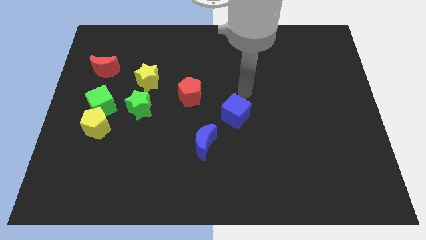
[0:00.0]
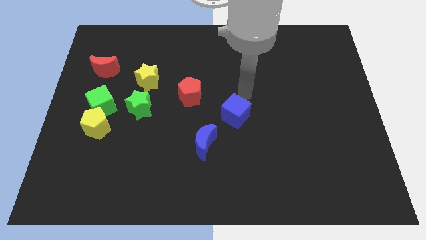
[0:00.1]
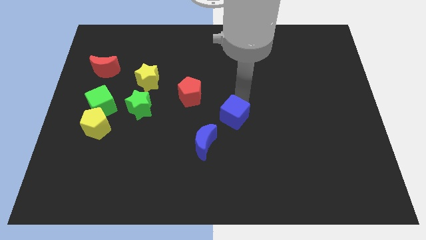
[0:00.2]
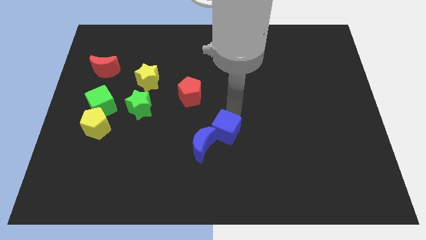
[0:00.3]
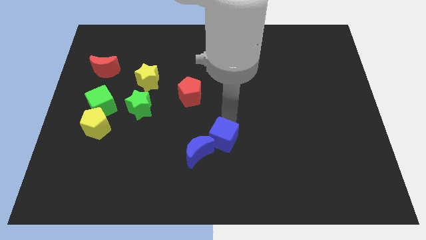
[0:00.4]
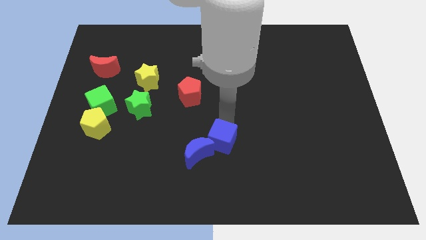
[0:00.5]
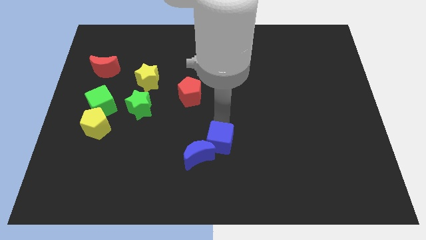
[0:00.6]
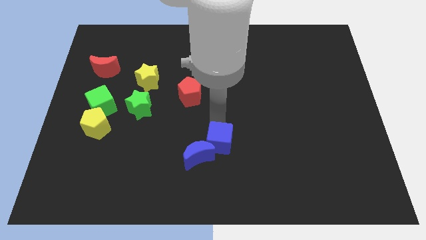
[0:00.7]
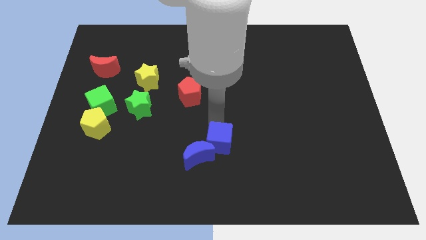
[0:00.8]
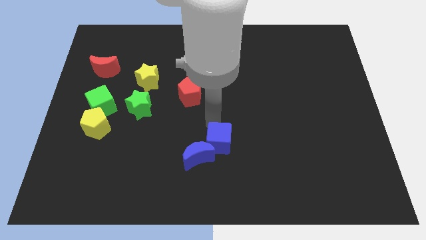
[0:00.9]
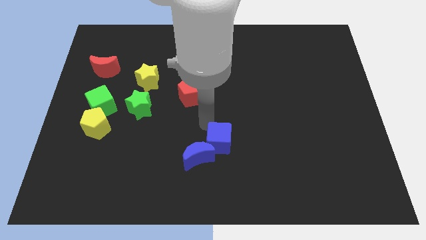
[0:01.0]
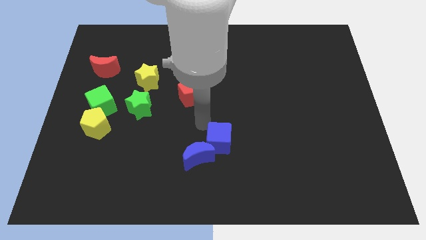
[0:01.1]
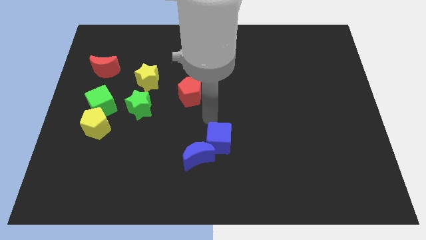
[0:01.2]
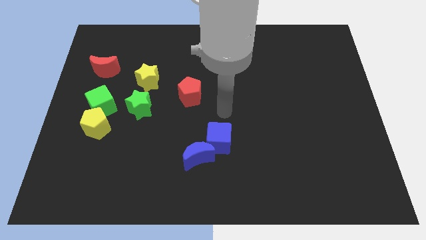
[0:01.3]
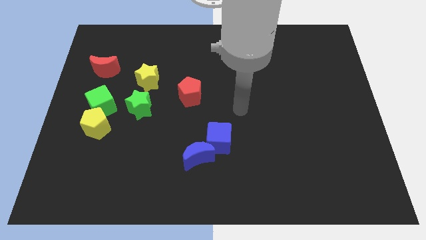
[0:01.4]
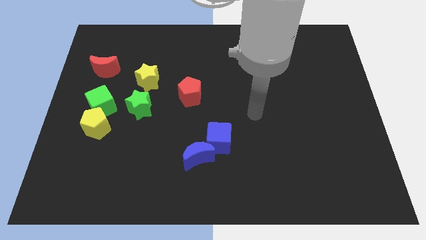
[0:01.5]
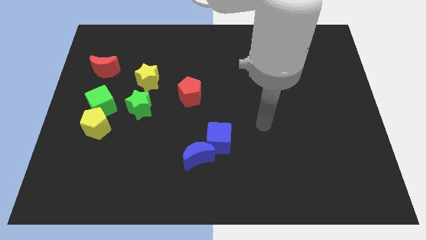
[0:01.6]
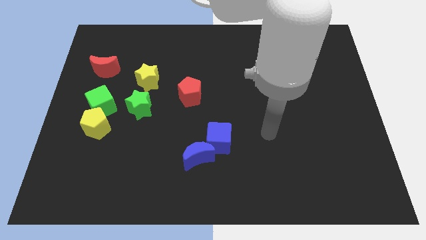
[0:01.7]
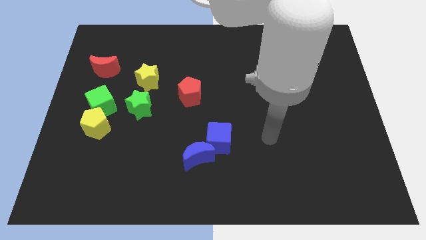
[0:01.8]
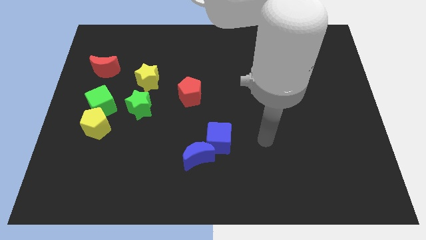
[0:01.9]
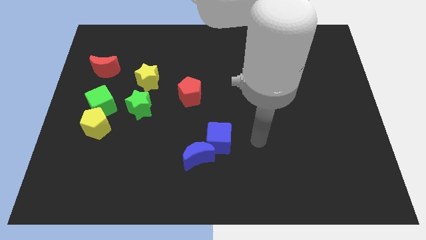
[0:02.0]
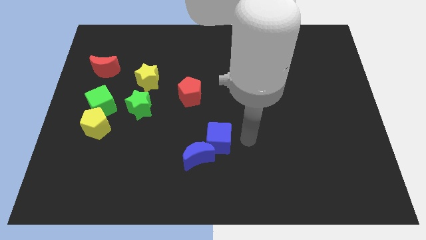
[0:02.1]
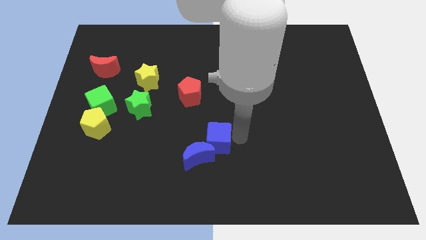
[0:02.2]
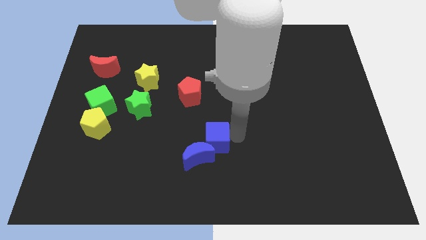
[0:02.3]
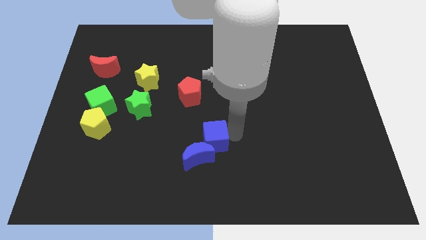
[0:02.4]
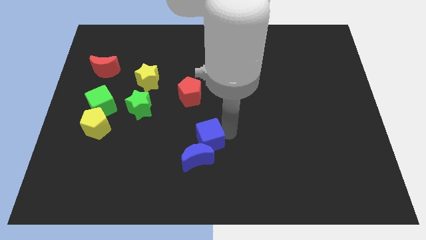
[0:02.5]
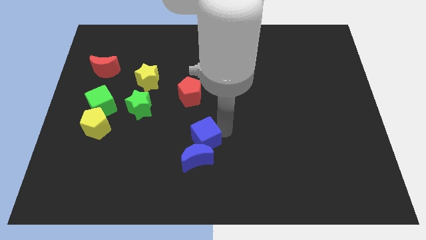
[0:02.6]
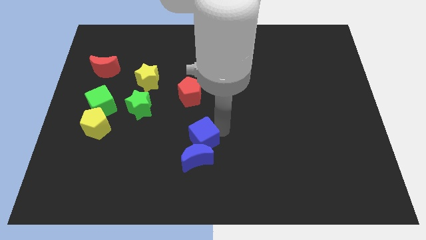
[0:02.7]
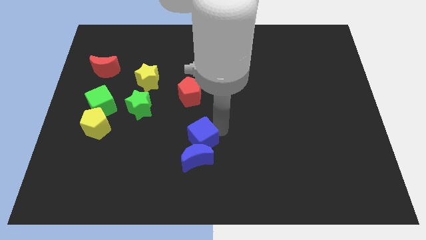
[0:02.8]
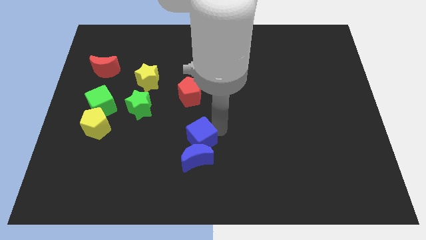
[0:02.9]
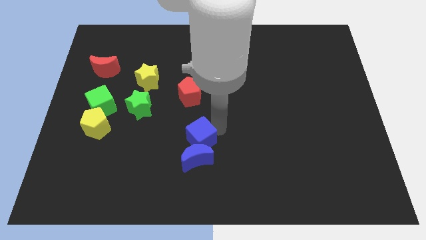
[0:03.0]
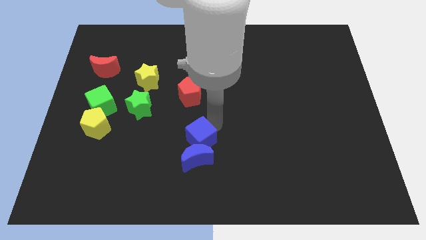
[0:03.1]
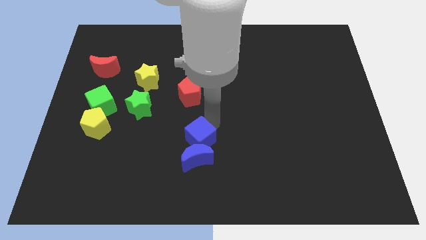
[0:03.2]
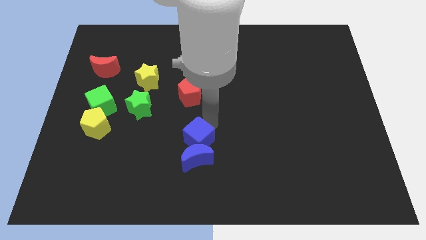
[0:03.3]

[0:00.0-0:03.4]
place the blue cube vertically above the blue crescent

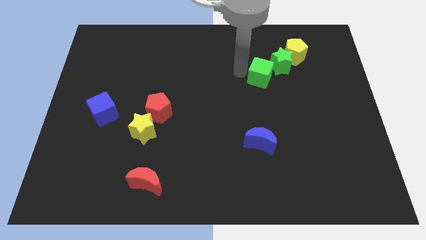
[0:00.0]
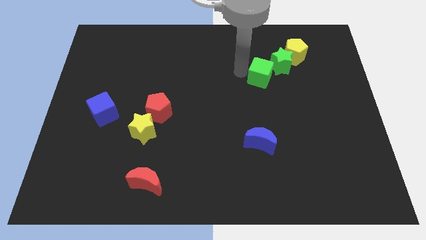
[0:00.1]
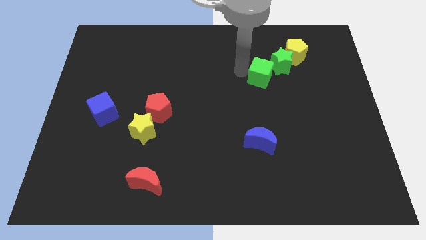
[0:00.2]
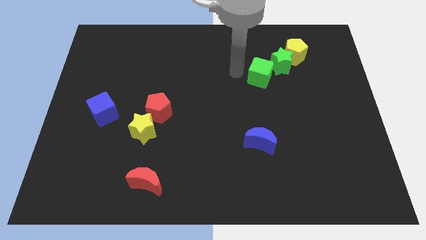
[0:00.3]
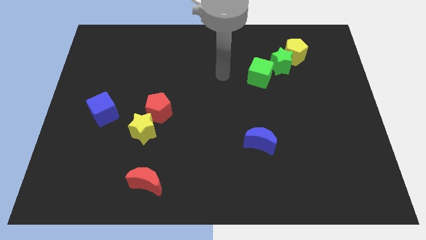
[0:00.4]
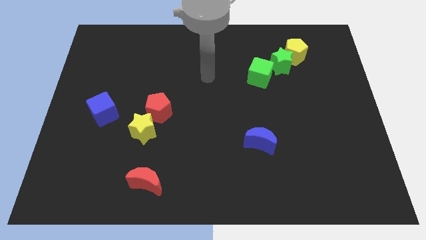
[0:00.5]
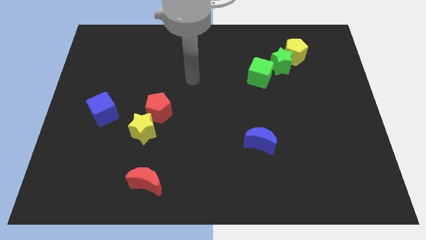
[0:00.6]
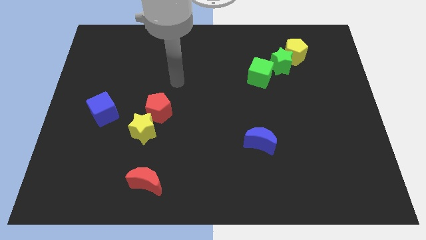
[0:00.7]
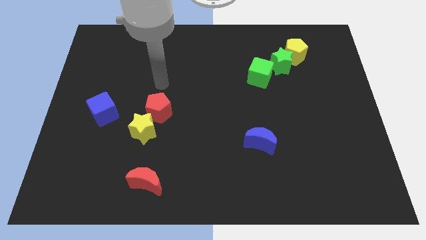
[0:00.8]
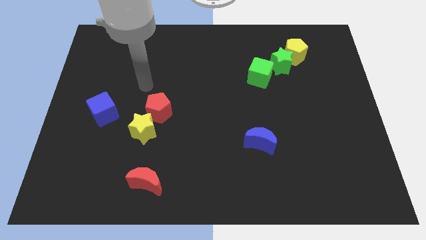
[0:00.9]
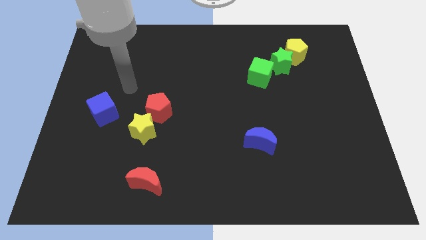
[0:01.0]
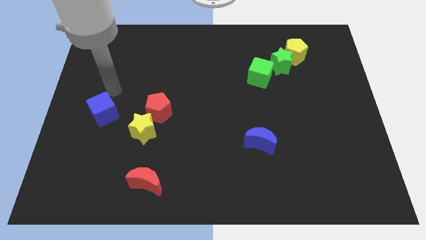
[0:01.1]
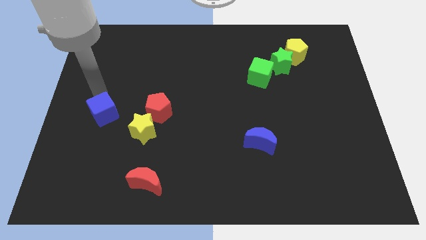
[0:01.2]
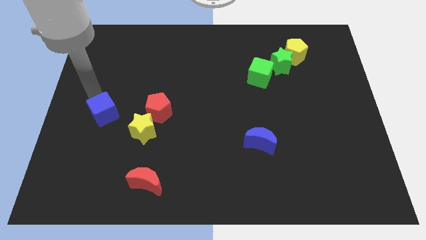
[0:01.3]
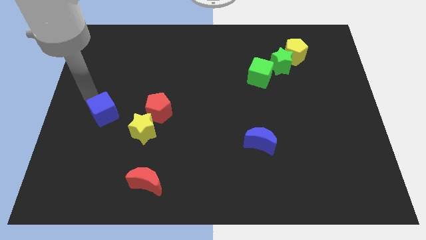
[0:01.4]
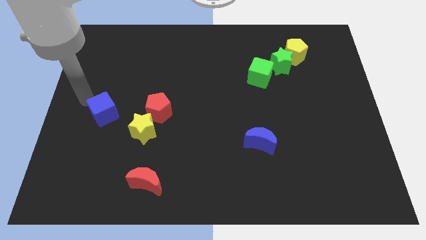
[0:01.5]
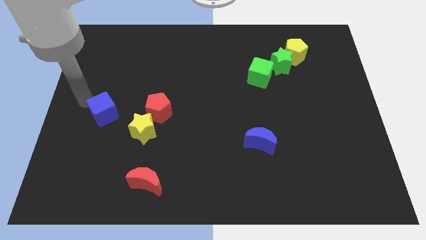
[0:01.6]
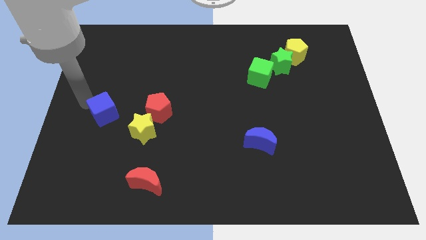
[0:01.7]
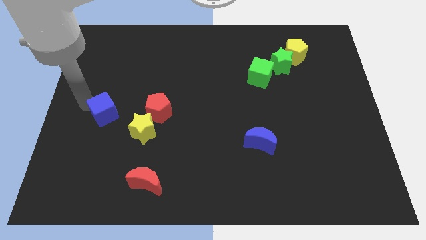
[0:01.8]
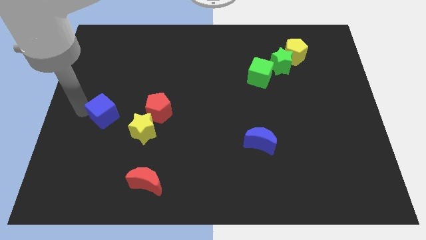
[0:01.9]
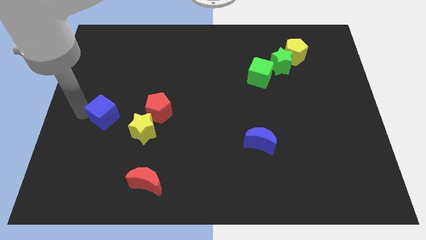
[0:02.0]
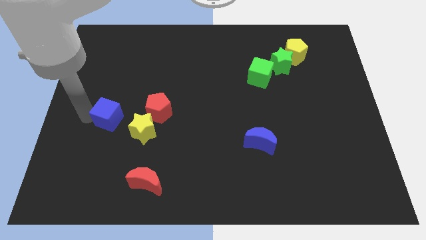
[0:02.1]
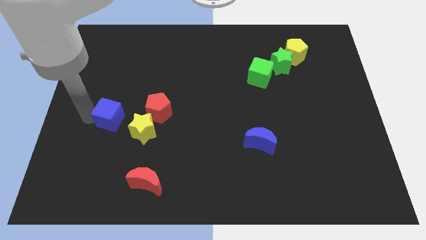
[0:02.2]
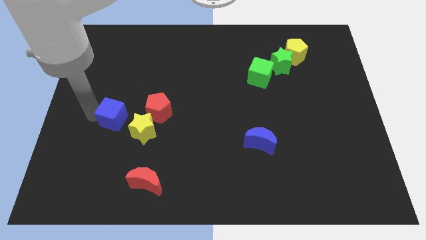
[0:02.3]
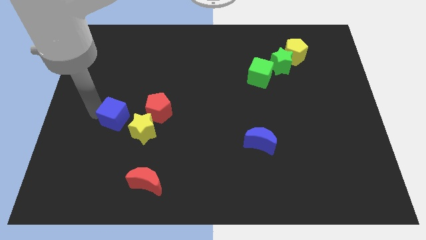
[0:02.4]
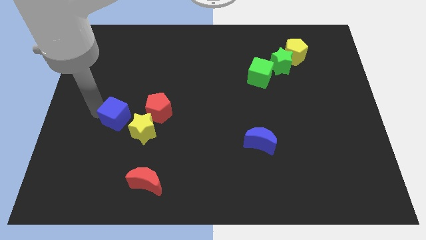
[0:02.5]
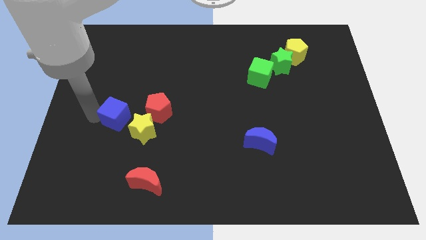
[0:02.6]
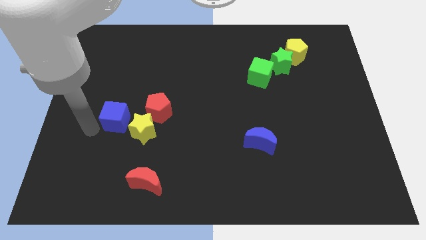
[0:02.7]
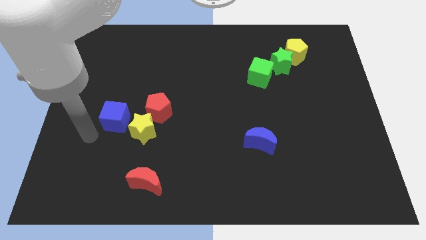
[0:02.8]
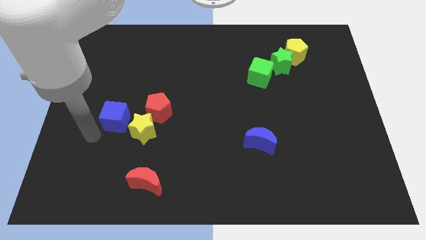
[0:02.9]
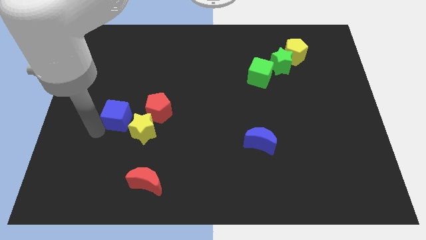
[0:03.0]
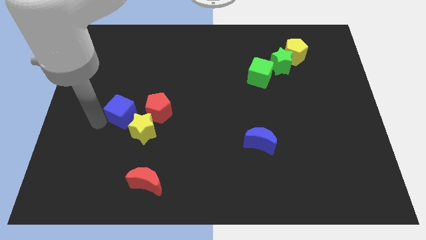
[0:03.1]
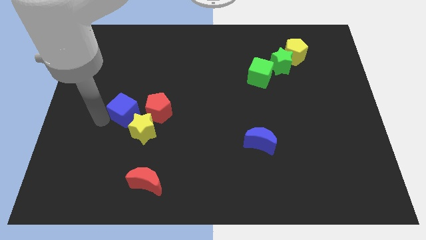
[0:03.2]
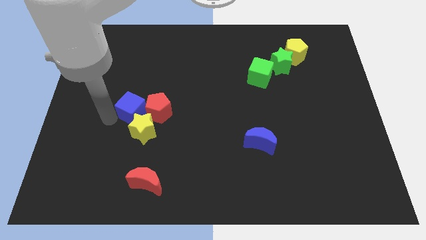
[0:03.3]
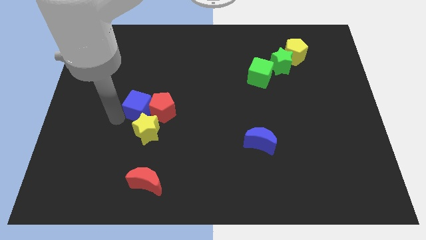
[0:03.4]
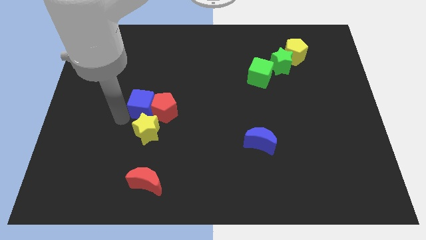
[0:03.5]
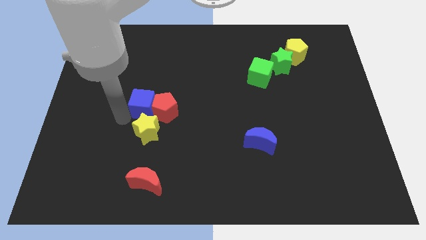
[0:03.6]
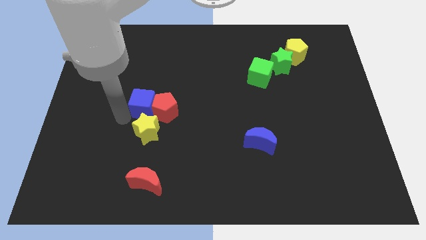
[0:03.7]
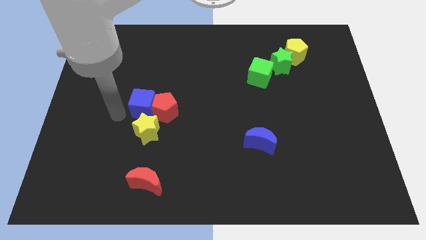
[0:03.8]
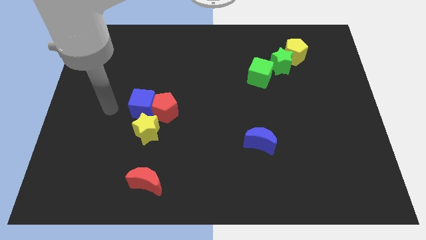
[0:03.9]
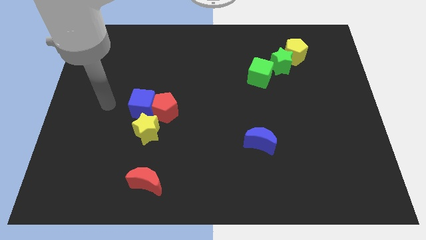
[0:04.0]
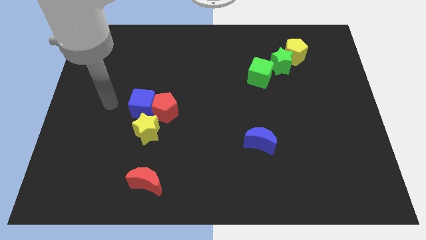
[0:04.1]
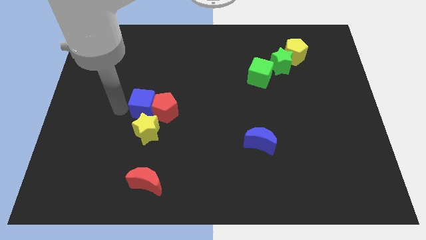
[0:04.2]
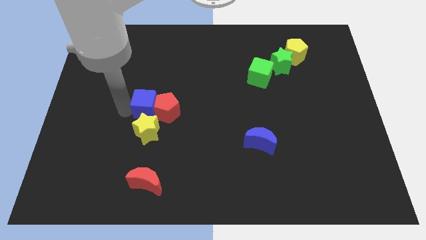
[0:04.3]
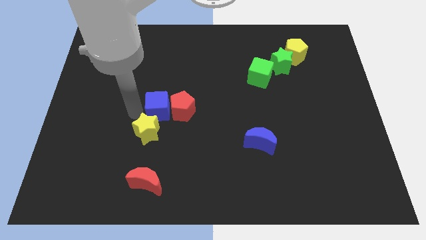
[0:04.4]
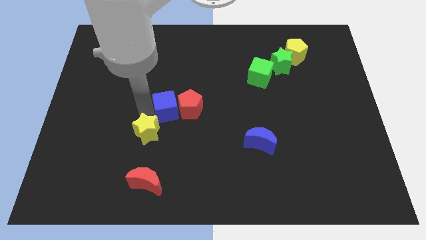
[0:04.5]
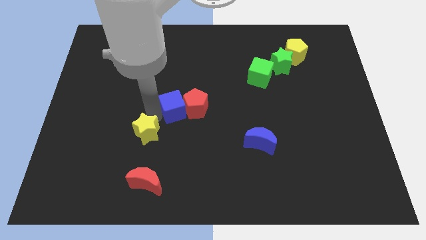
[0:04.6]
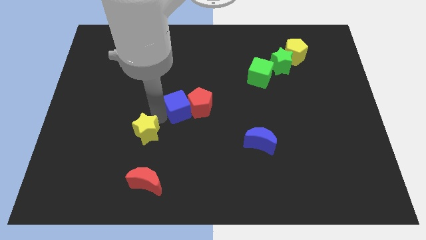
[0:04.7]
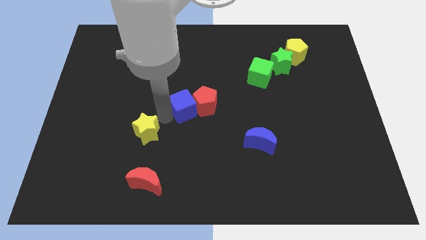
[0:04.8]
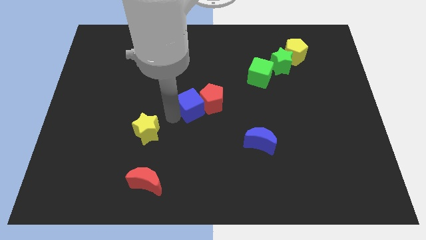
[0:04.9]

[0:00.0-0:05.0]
push the blue cube into the red pentagon

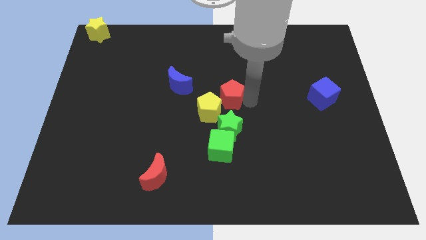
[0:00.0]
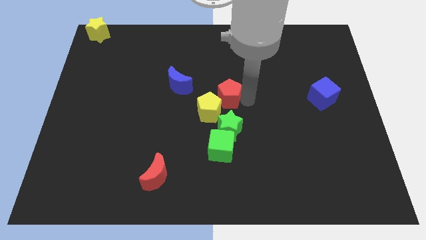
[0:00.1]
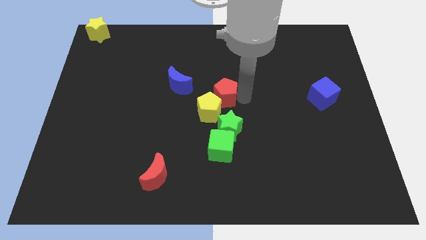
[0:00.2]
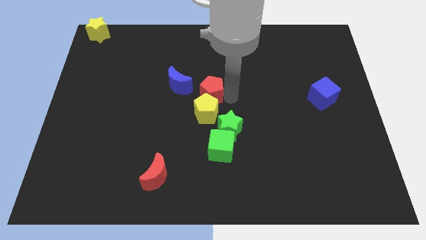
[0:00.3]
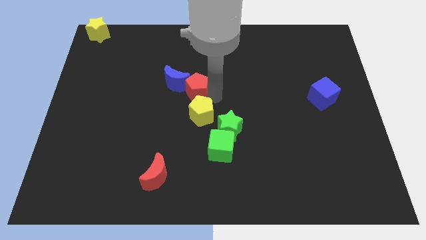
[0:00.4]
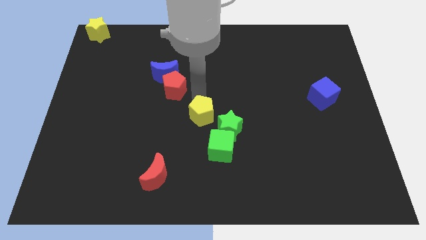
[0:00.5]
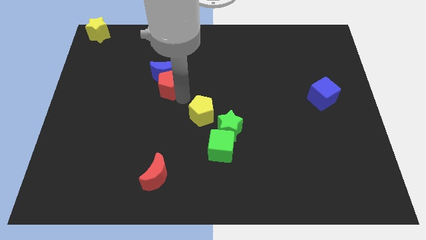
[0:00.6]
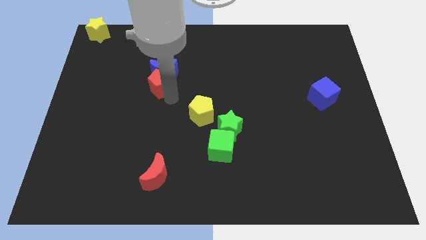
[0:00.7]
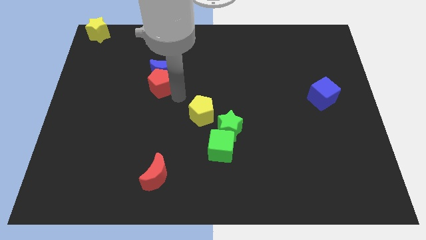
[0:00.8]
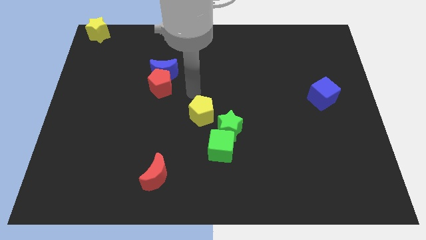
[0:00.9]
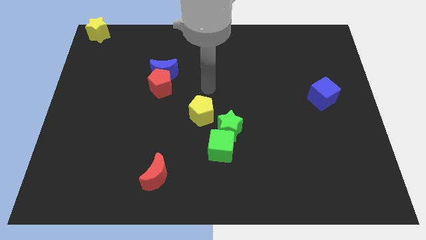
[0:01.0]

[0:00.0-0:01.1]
put the red pentagon at the bottom of the blue crescent
